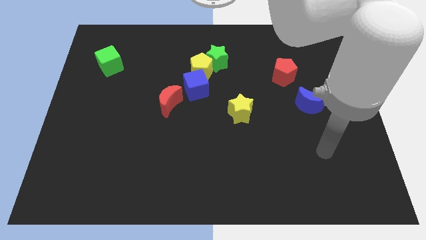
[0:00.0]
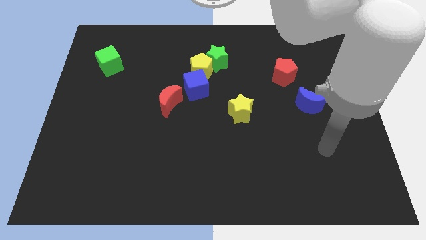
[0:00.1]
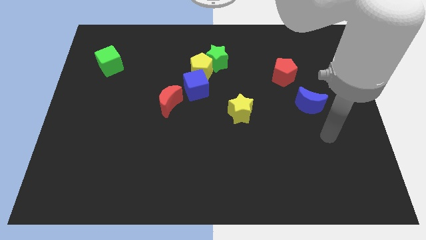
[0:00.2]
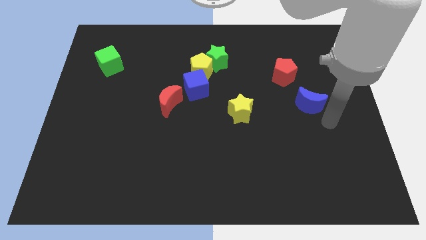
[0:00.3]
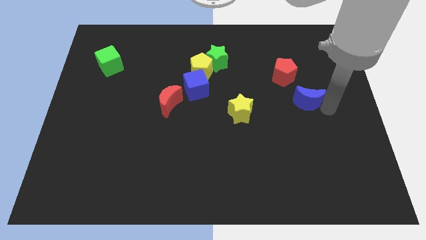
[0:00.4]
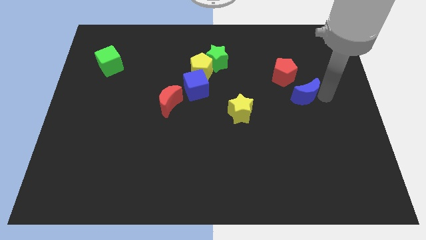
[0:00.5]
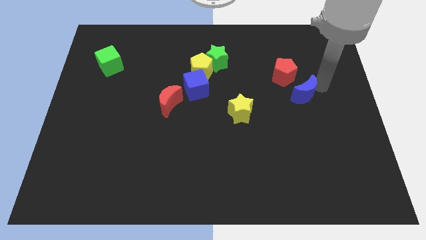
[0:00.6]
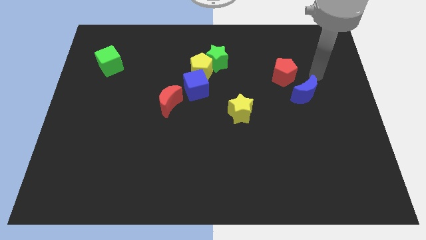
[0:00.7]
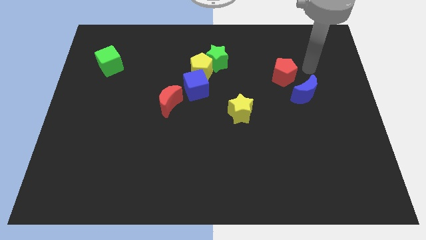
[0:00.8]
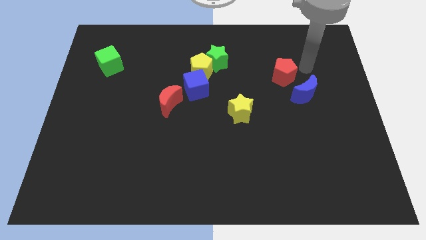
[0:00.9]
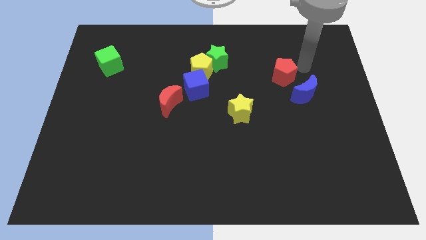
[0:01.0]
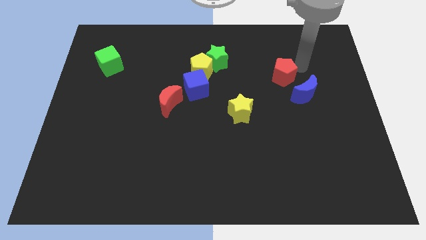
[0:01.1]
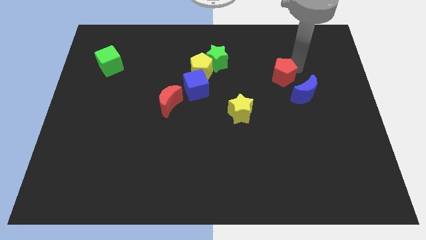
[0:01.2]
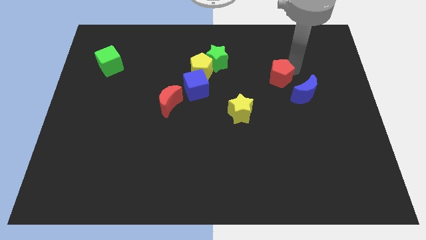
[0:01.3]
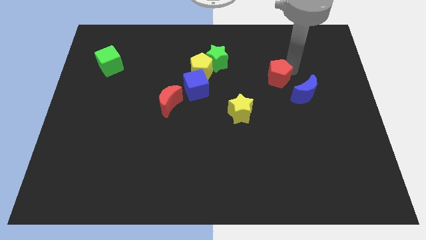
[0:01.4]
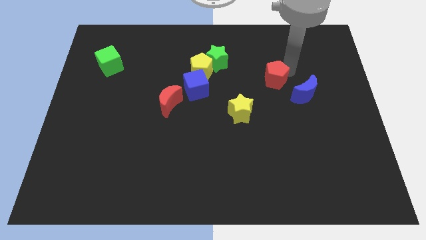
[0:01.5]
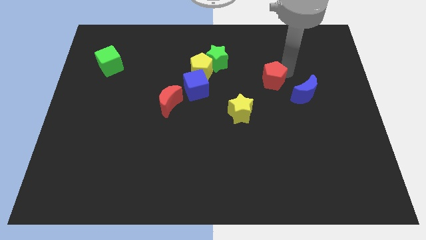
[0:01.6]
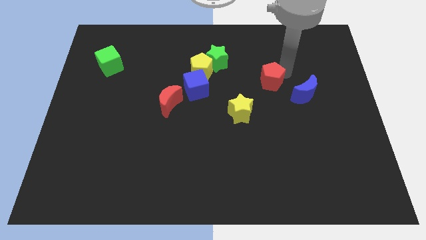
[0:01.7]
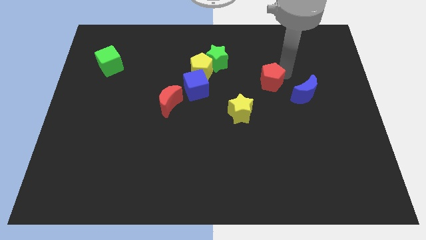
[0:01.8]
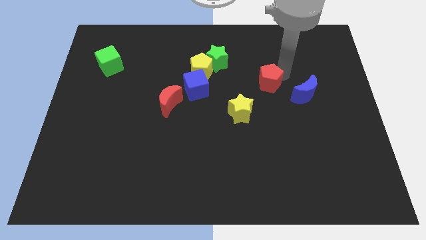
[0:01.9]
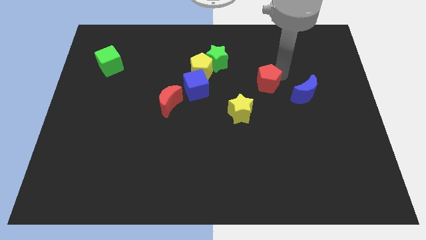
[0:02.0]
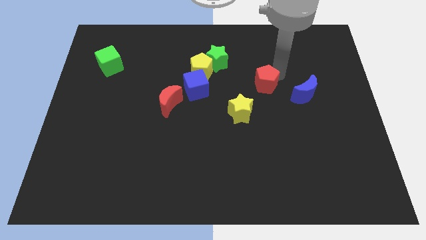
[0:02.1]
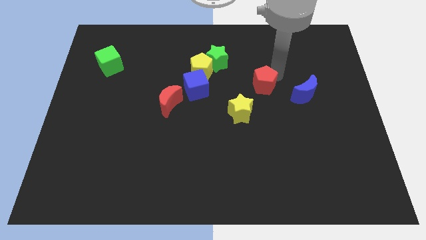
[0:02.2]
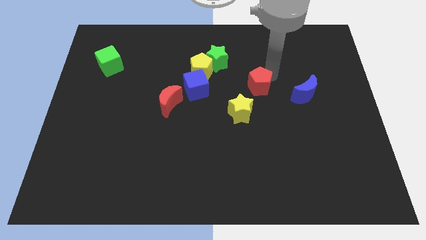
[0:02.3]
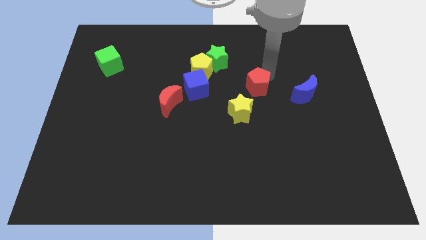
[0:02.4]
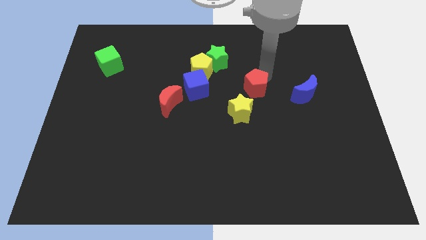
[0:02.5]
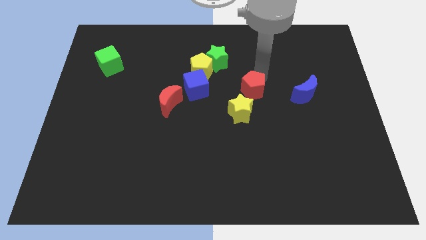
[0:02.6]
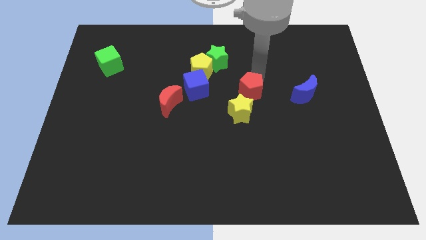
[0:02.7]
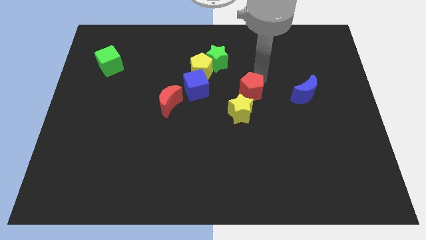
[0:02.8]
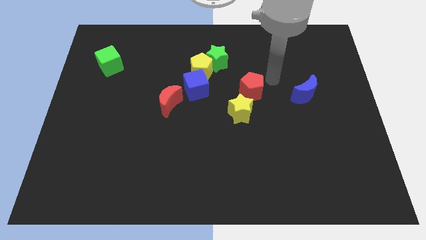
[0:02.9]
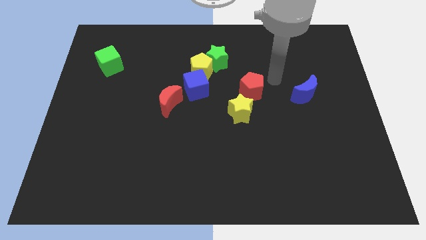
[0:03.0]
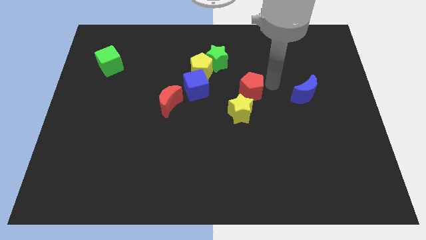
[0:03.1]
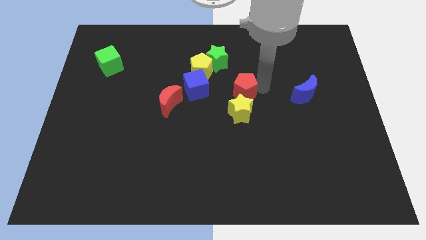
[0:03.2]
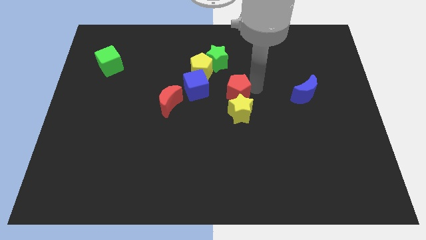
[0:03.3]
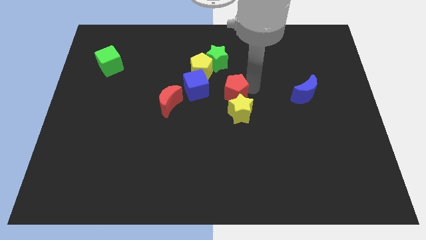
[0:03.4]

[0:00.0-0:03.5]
move the red pentagon to the top of the yellow star

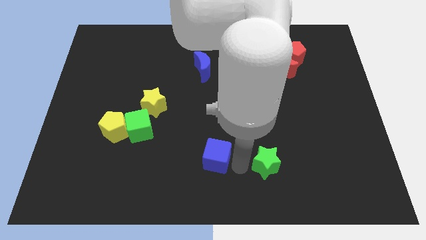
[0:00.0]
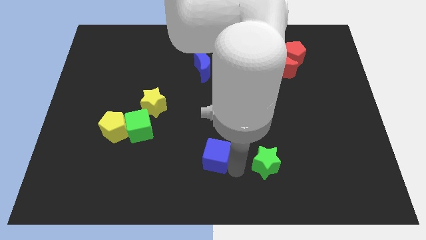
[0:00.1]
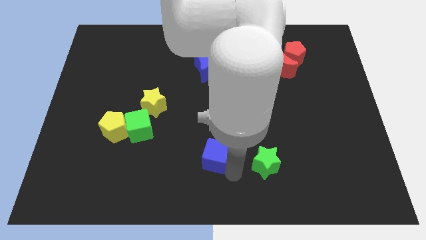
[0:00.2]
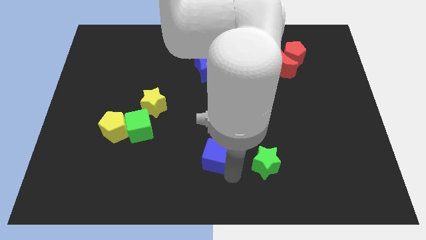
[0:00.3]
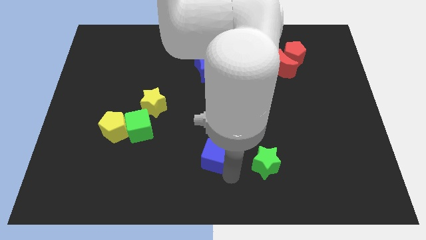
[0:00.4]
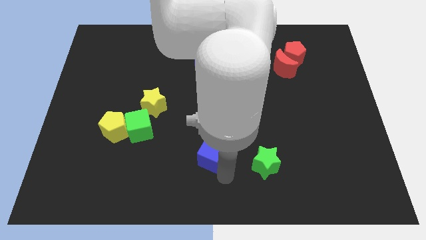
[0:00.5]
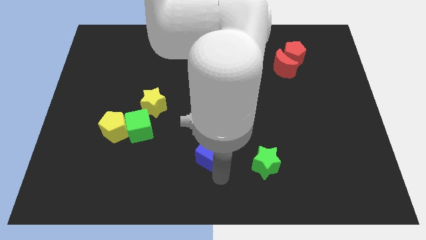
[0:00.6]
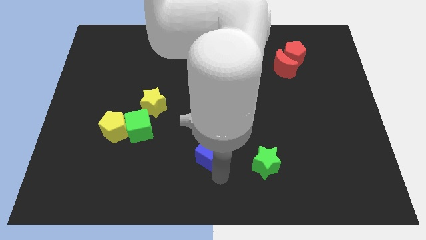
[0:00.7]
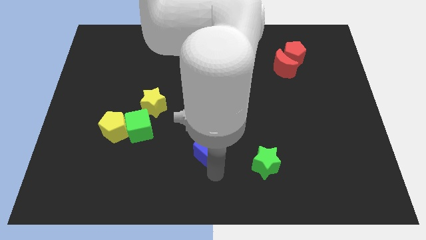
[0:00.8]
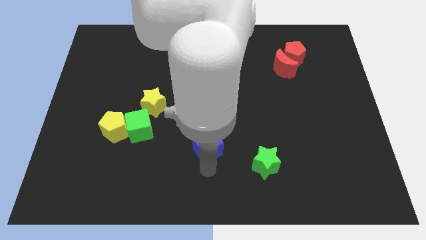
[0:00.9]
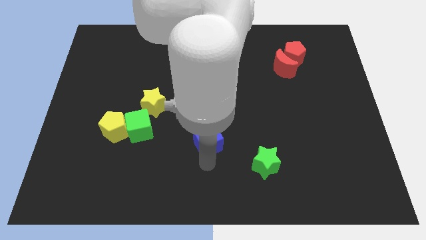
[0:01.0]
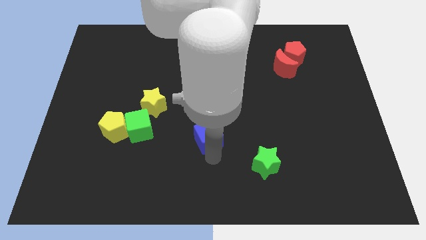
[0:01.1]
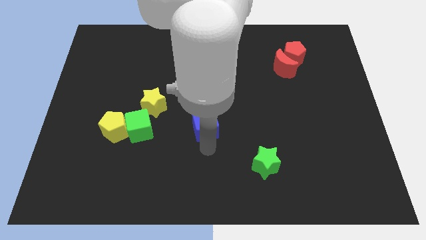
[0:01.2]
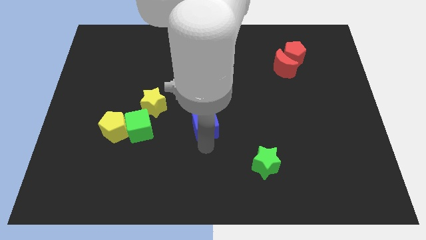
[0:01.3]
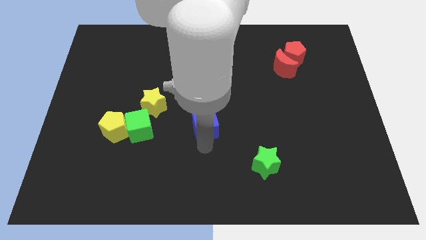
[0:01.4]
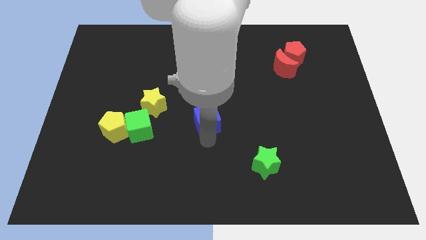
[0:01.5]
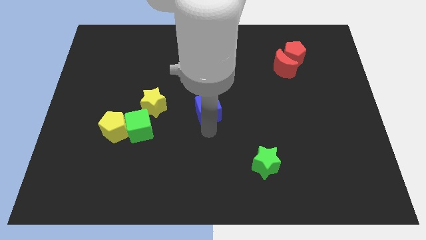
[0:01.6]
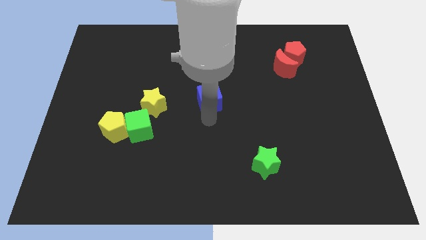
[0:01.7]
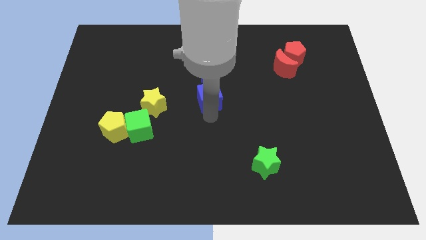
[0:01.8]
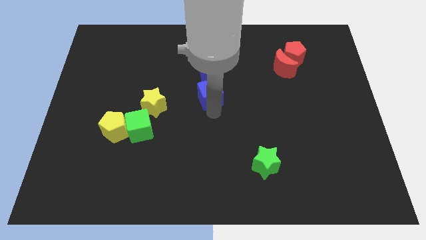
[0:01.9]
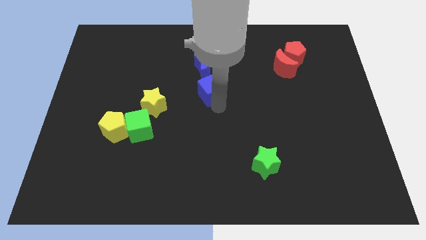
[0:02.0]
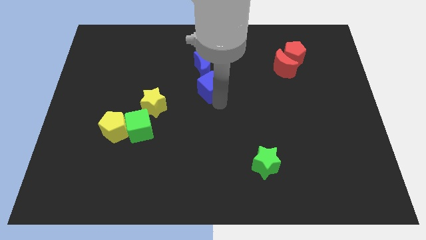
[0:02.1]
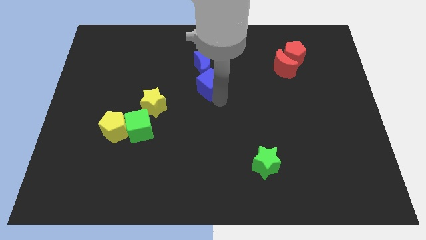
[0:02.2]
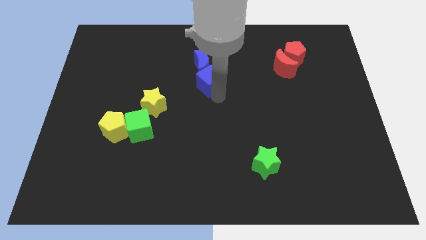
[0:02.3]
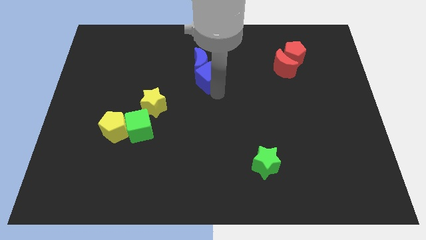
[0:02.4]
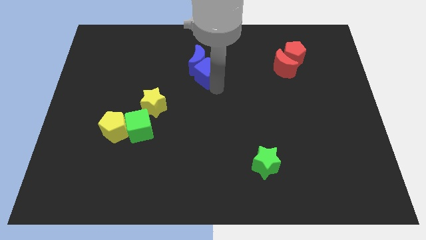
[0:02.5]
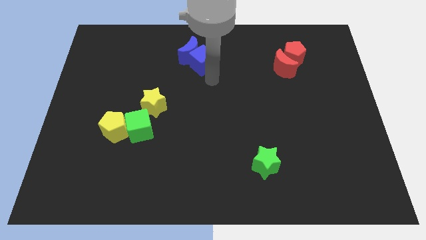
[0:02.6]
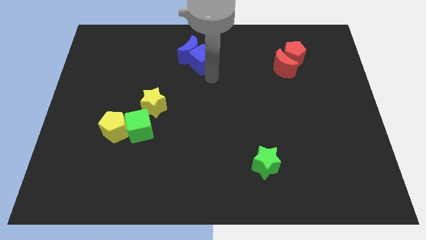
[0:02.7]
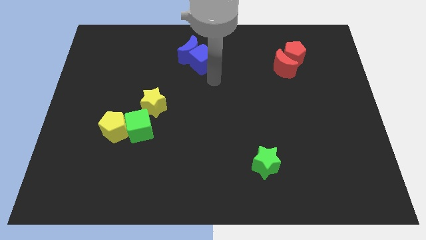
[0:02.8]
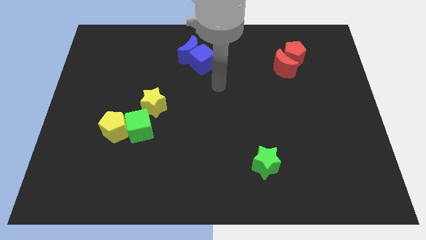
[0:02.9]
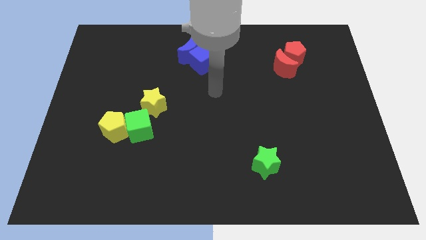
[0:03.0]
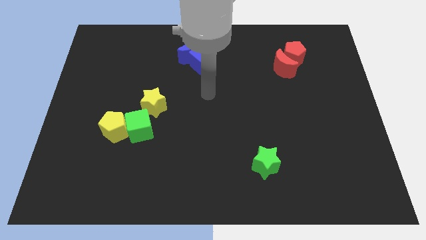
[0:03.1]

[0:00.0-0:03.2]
push the blue blocks towards the top center of the board

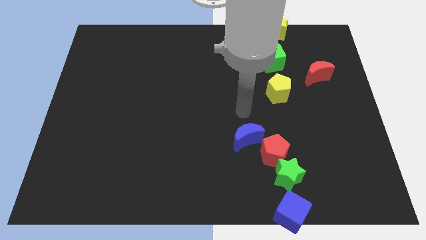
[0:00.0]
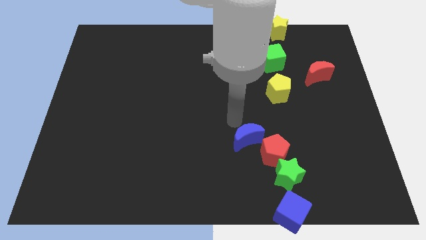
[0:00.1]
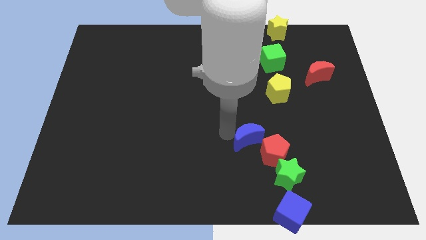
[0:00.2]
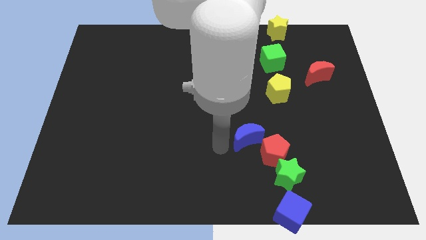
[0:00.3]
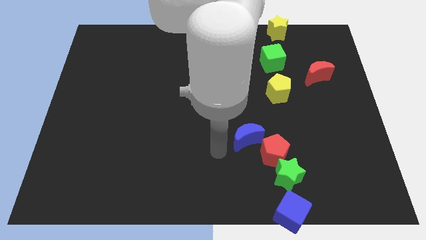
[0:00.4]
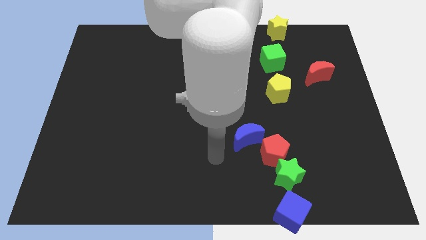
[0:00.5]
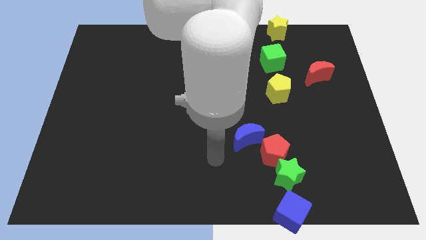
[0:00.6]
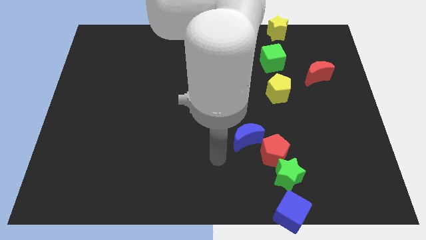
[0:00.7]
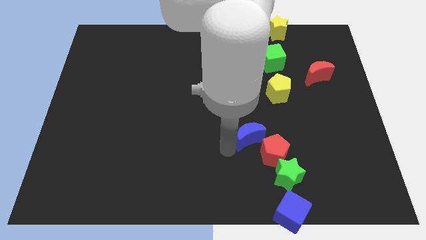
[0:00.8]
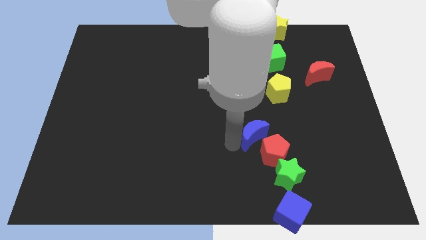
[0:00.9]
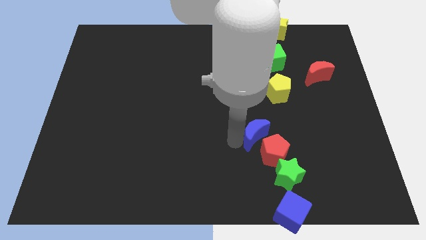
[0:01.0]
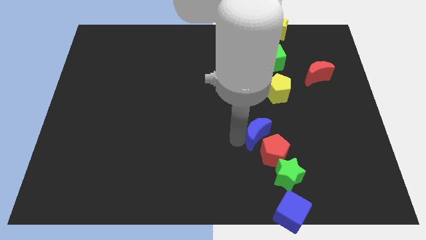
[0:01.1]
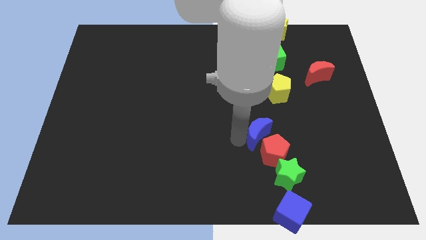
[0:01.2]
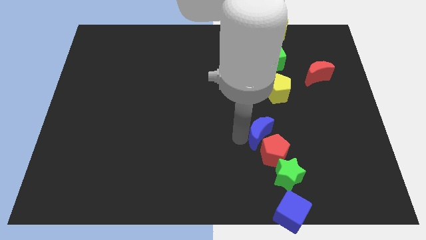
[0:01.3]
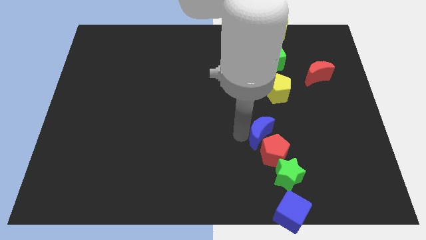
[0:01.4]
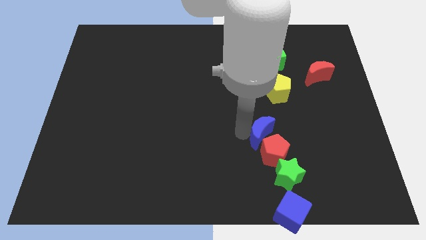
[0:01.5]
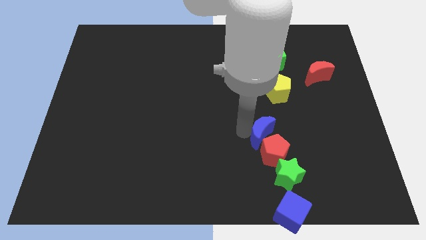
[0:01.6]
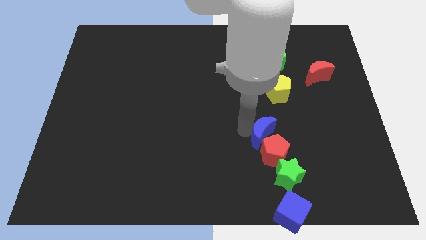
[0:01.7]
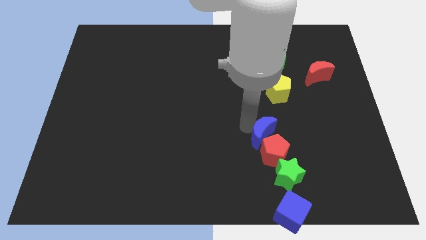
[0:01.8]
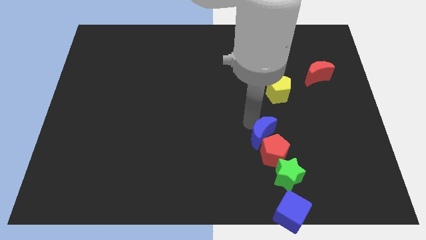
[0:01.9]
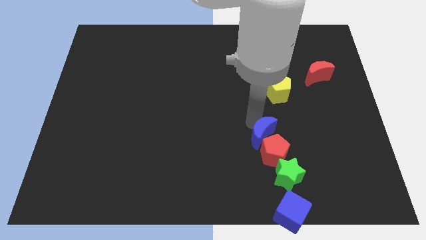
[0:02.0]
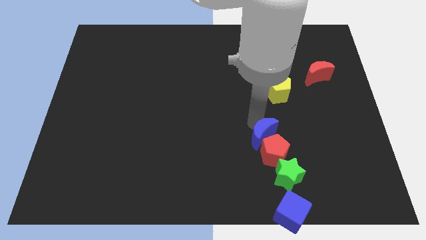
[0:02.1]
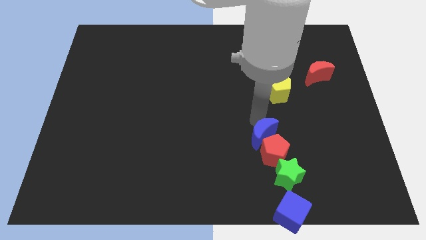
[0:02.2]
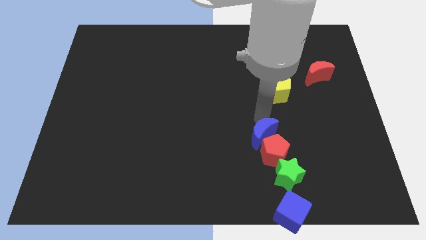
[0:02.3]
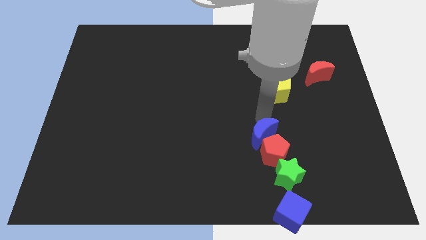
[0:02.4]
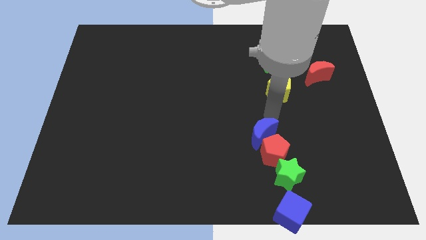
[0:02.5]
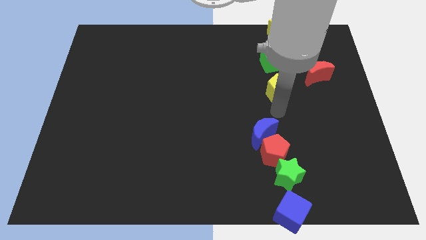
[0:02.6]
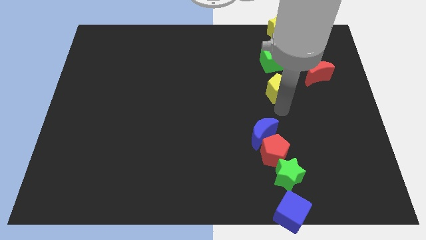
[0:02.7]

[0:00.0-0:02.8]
move the blue moon to the top side of the red pentagon

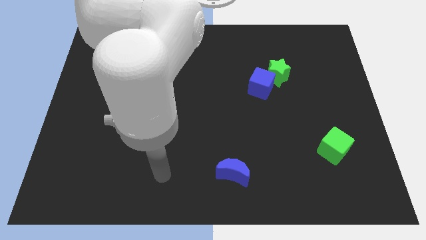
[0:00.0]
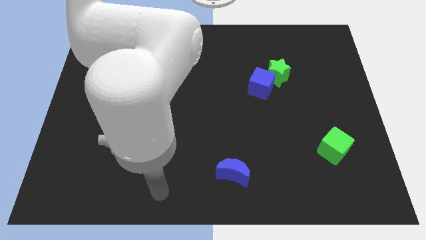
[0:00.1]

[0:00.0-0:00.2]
push the blue crescent towards the blue cube
